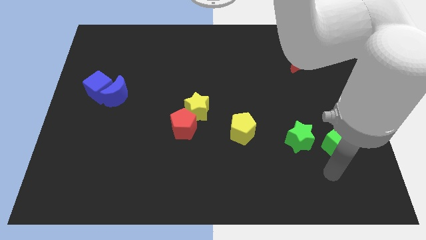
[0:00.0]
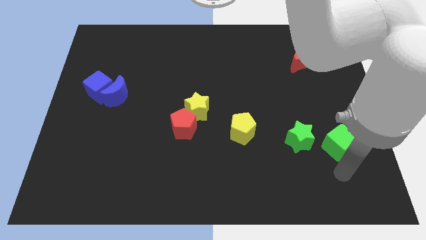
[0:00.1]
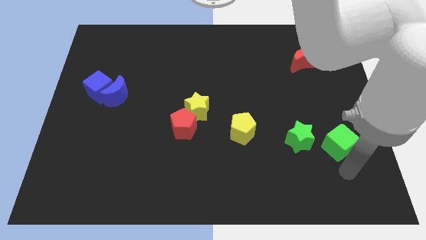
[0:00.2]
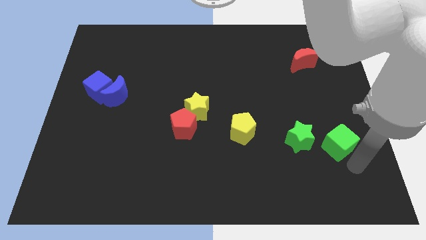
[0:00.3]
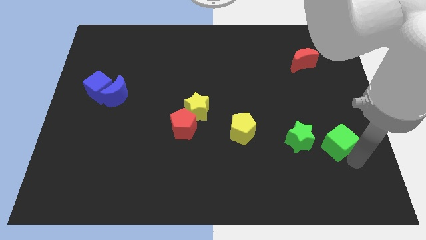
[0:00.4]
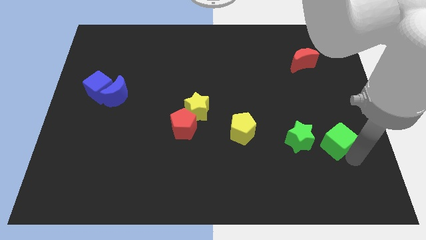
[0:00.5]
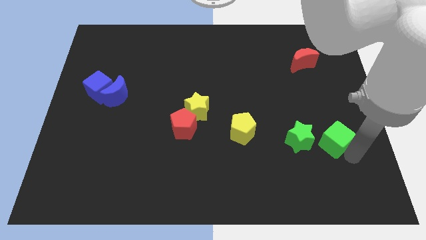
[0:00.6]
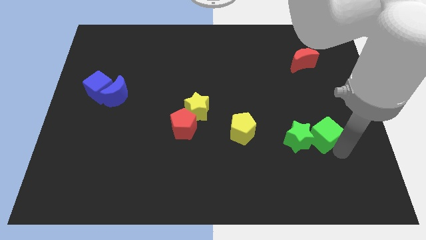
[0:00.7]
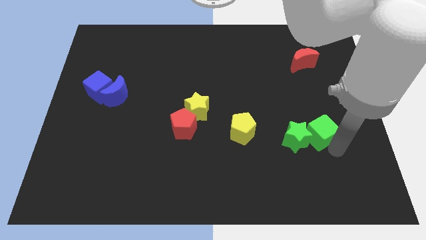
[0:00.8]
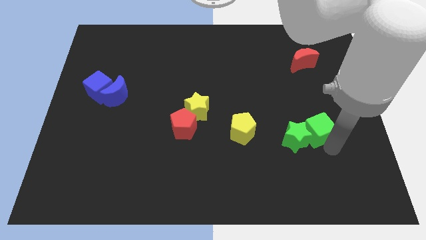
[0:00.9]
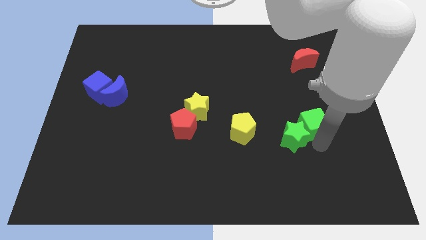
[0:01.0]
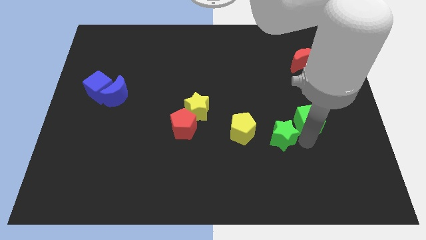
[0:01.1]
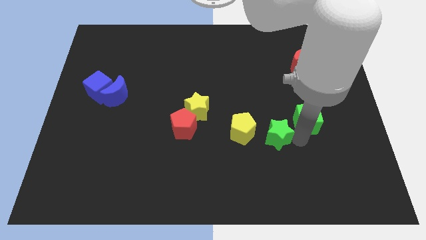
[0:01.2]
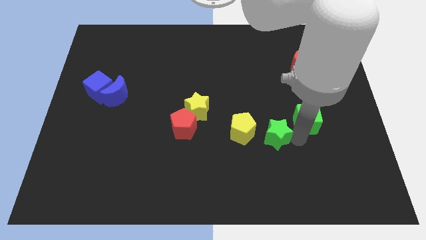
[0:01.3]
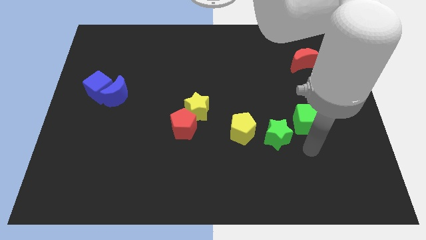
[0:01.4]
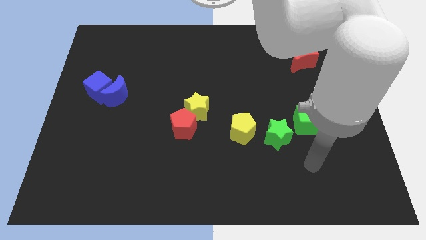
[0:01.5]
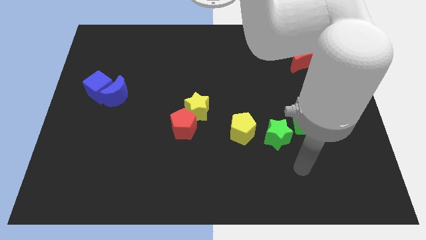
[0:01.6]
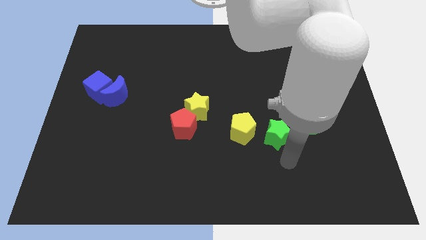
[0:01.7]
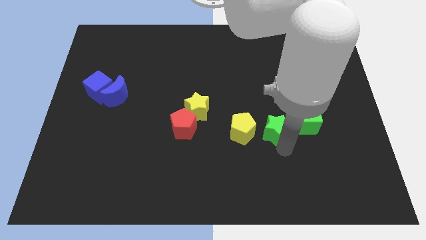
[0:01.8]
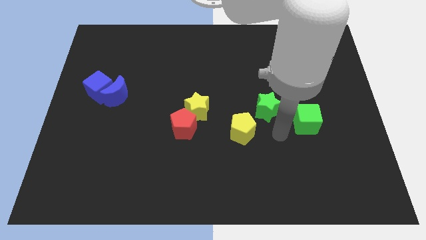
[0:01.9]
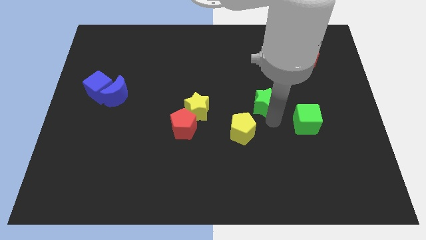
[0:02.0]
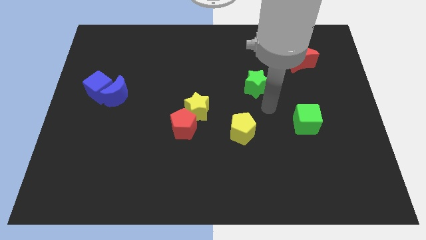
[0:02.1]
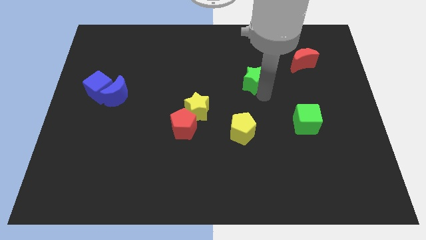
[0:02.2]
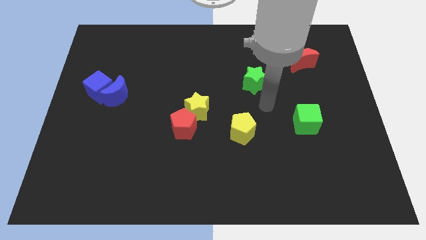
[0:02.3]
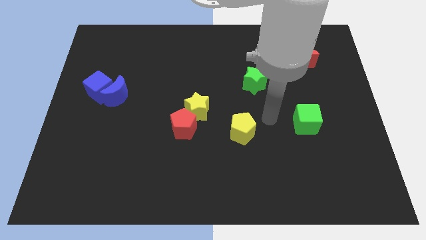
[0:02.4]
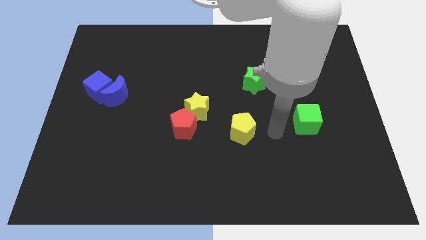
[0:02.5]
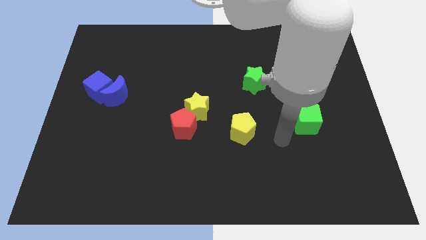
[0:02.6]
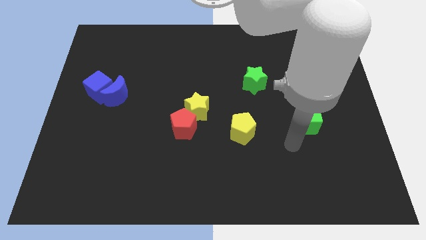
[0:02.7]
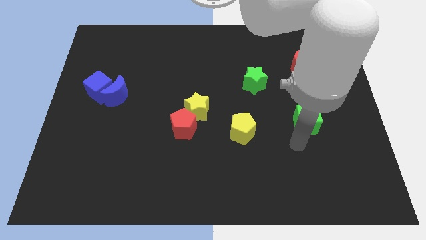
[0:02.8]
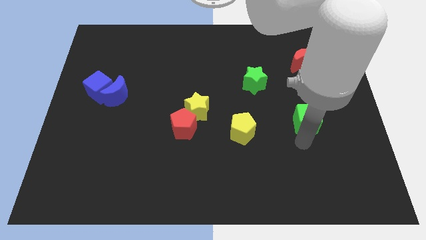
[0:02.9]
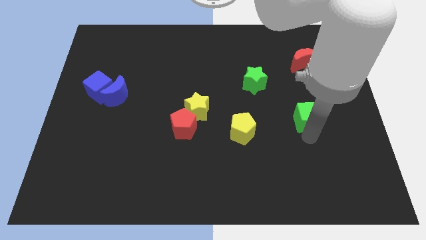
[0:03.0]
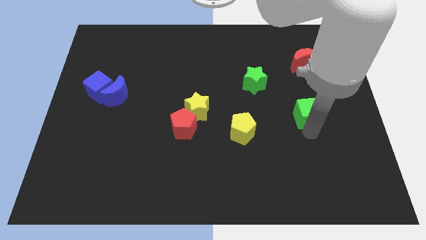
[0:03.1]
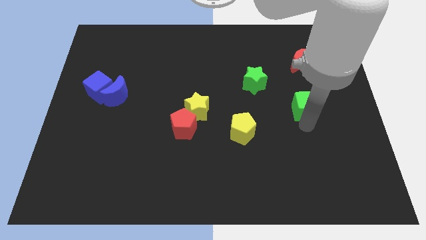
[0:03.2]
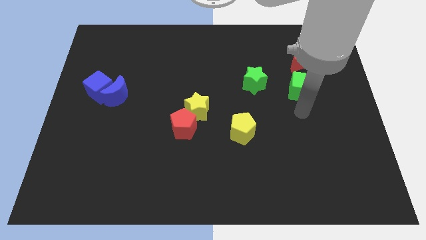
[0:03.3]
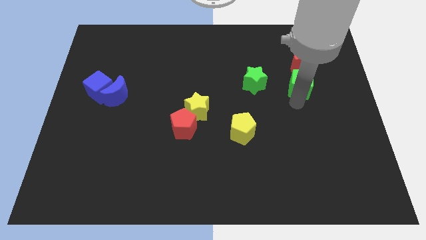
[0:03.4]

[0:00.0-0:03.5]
push the green cube towards the red moon

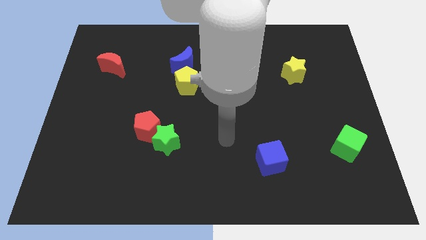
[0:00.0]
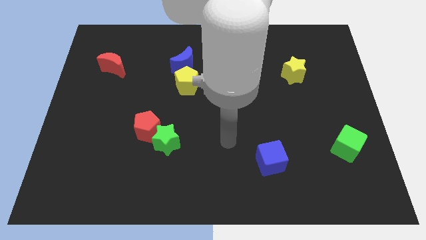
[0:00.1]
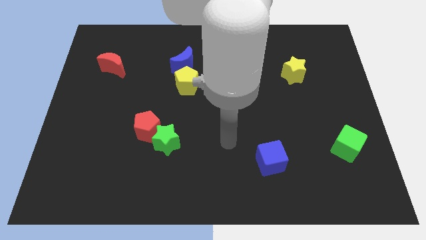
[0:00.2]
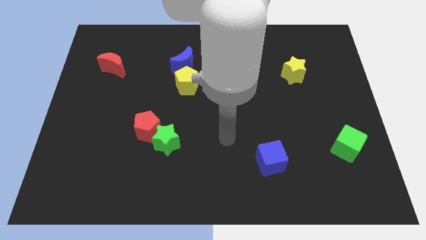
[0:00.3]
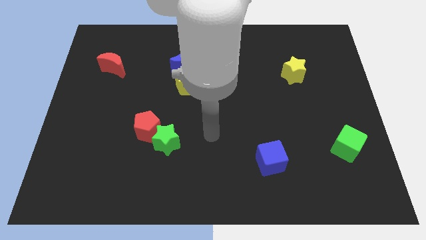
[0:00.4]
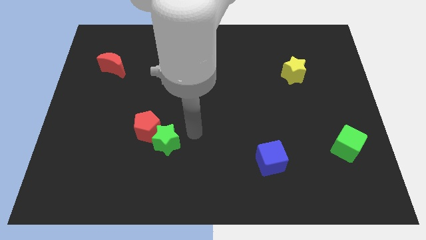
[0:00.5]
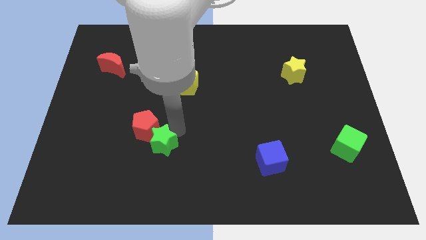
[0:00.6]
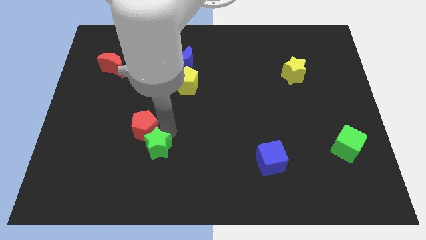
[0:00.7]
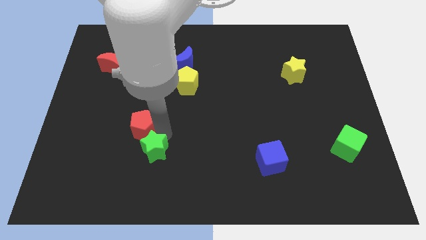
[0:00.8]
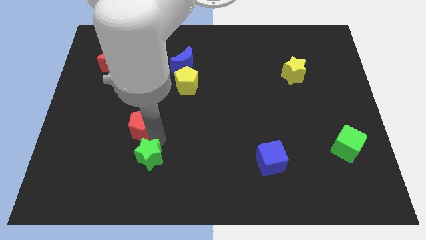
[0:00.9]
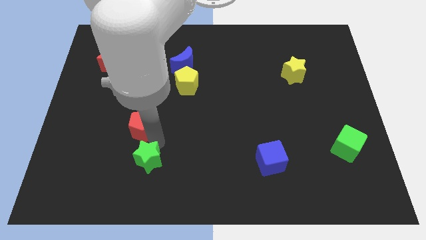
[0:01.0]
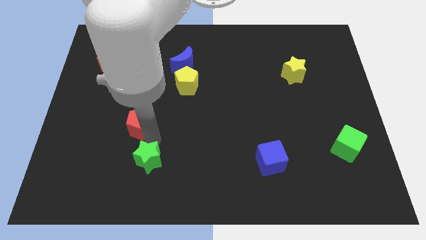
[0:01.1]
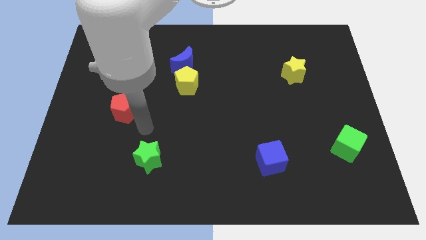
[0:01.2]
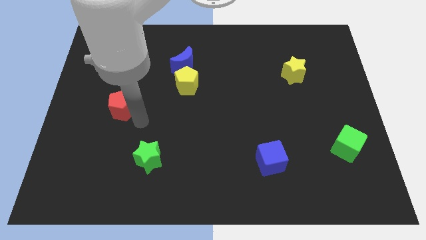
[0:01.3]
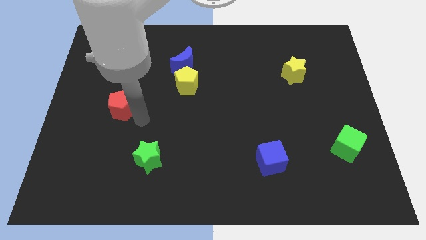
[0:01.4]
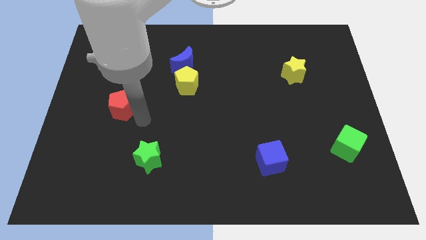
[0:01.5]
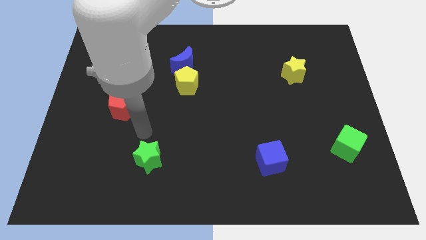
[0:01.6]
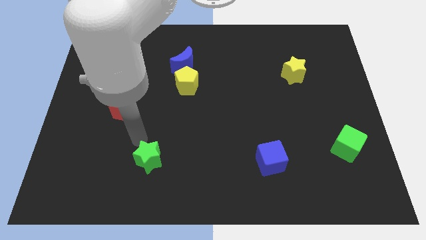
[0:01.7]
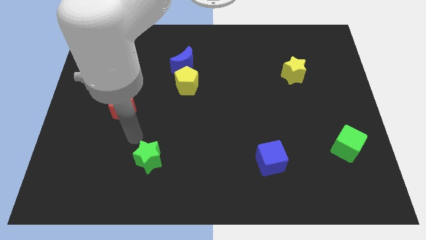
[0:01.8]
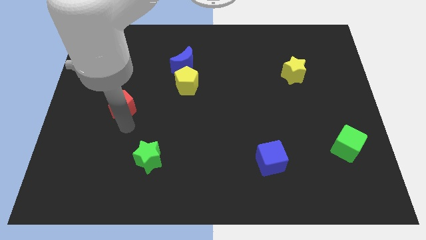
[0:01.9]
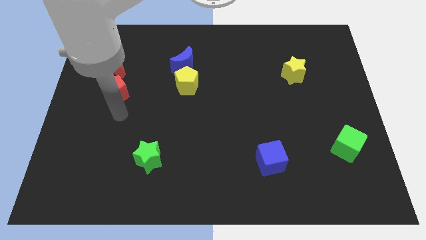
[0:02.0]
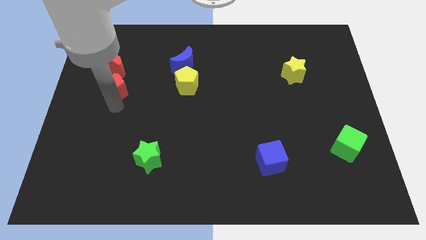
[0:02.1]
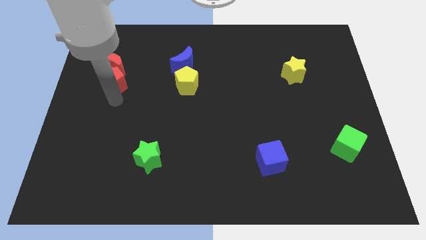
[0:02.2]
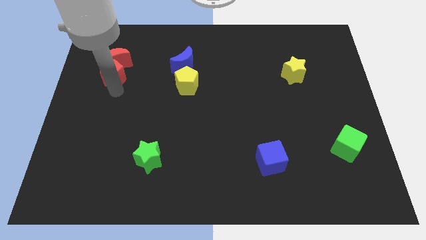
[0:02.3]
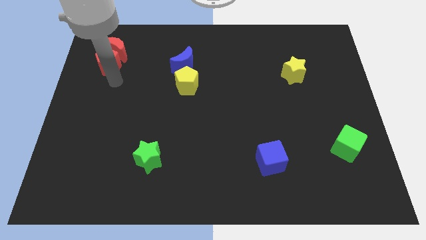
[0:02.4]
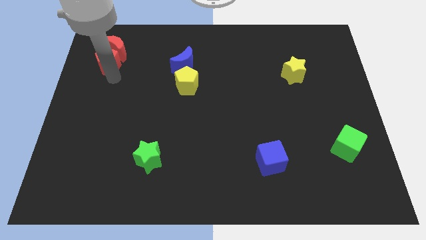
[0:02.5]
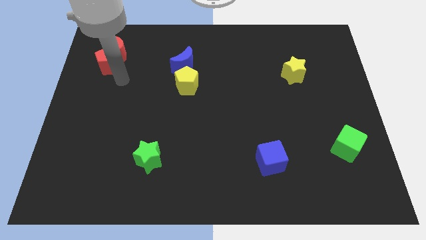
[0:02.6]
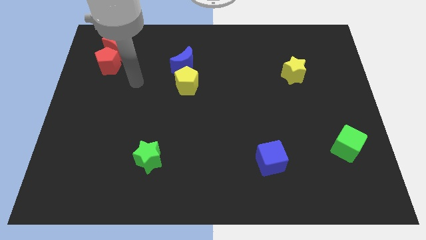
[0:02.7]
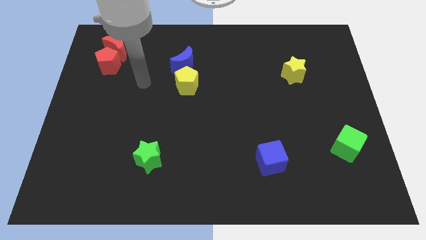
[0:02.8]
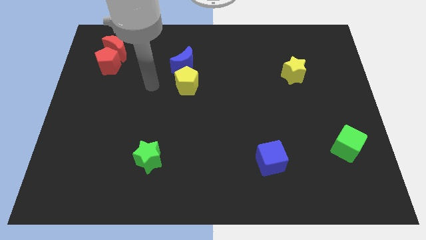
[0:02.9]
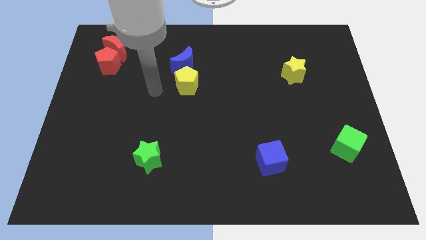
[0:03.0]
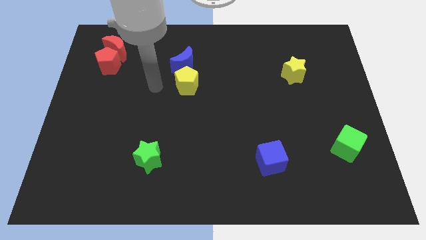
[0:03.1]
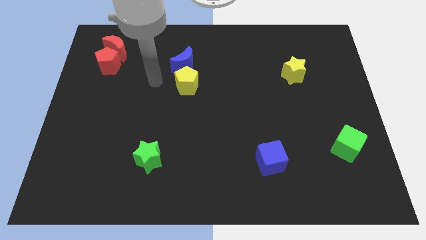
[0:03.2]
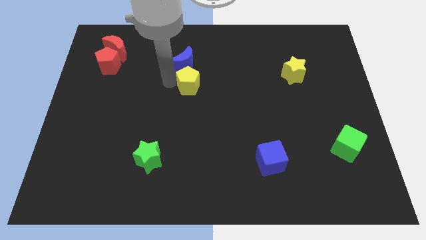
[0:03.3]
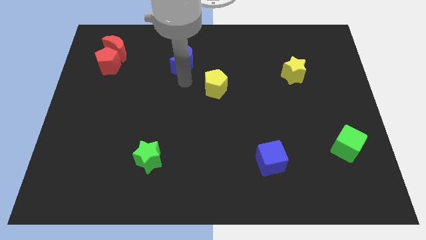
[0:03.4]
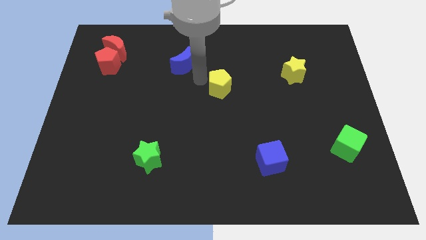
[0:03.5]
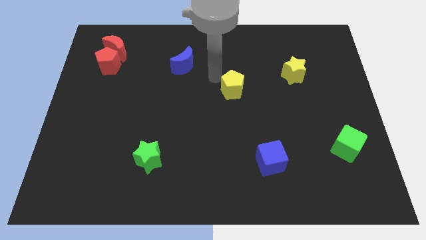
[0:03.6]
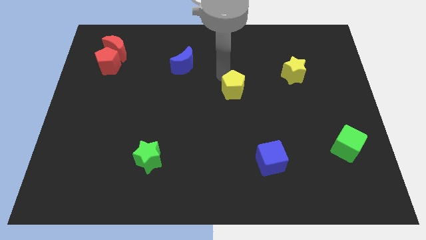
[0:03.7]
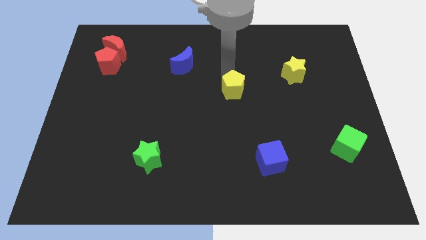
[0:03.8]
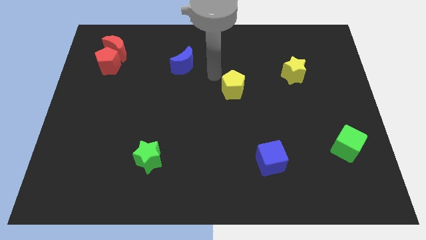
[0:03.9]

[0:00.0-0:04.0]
place yellow pentagon in between yellow star and blue moon

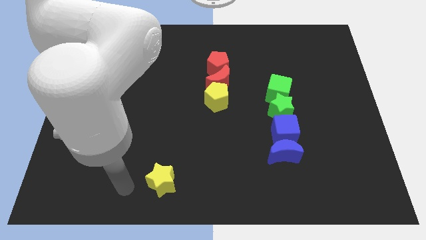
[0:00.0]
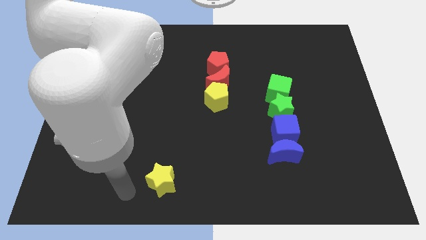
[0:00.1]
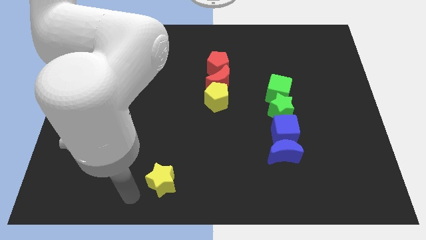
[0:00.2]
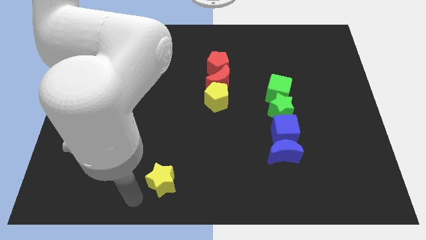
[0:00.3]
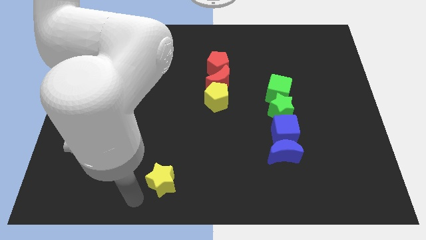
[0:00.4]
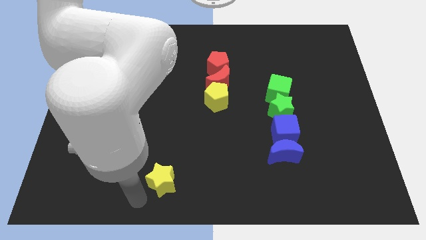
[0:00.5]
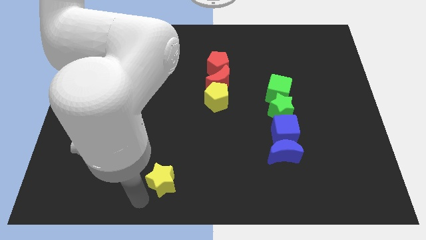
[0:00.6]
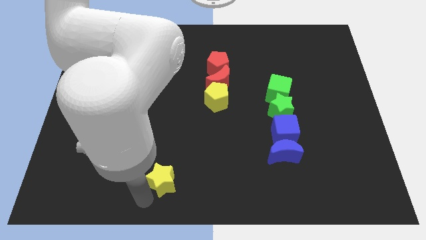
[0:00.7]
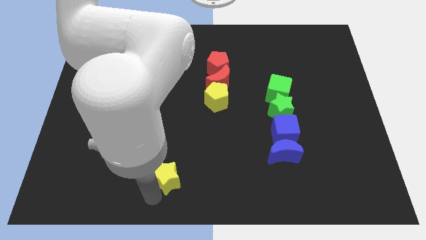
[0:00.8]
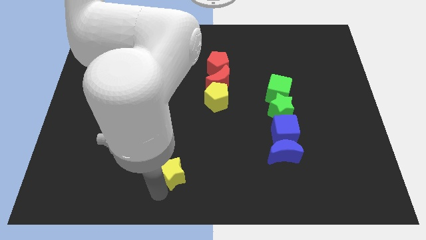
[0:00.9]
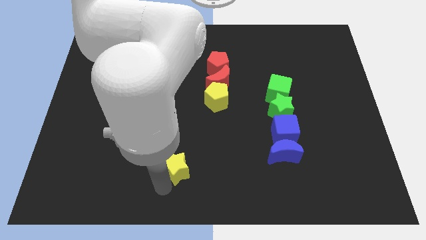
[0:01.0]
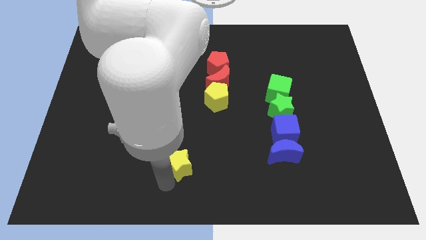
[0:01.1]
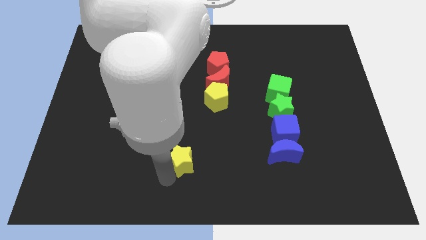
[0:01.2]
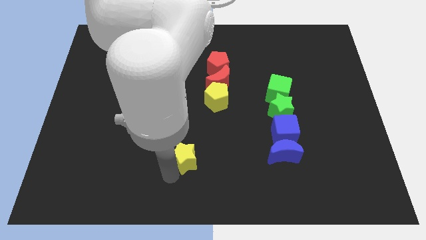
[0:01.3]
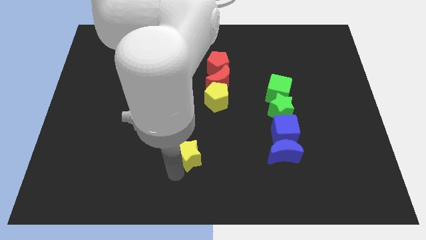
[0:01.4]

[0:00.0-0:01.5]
move the yellow star to the bottom center
